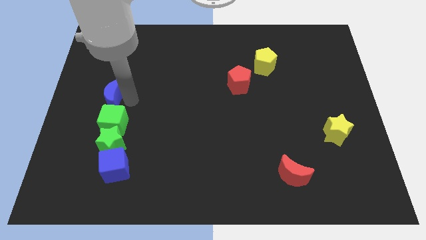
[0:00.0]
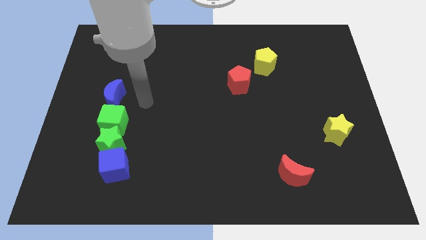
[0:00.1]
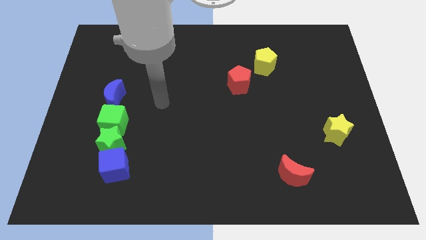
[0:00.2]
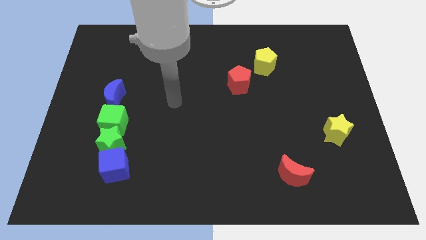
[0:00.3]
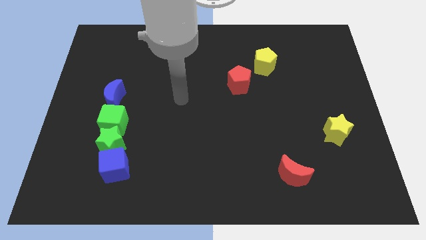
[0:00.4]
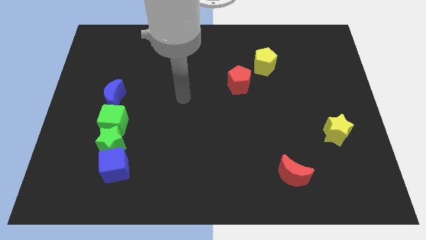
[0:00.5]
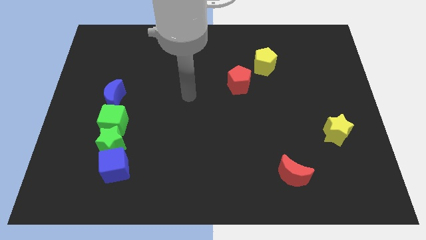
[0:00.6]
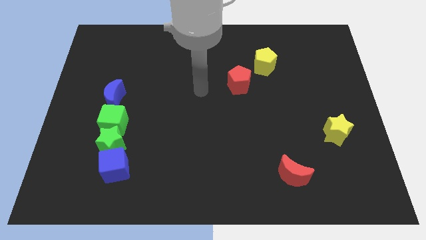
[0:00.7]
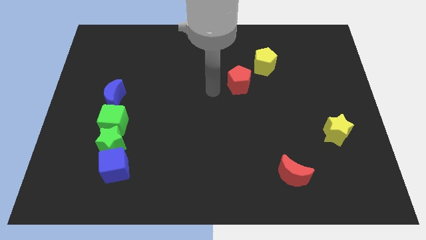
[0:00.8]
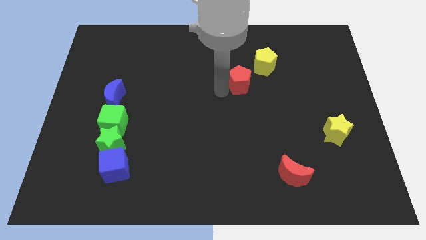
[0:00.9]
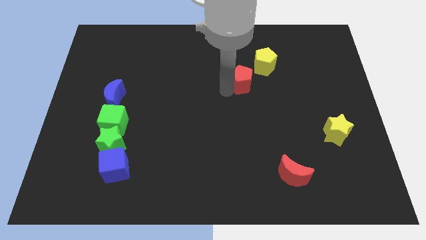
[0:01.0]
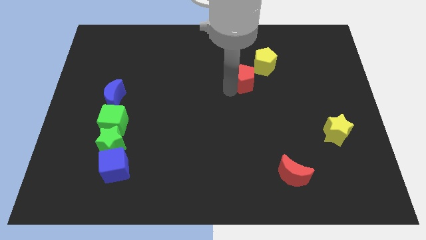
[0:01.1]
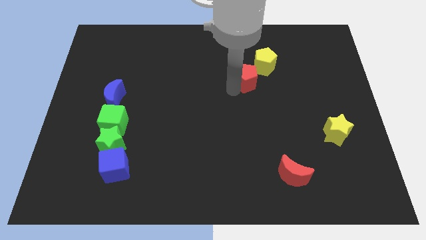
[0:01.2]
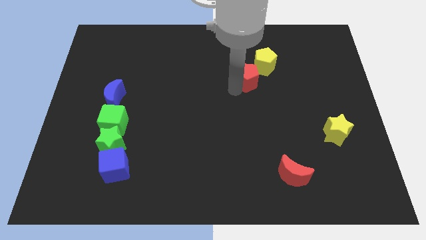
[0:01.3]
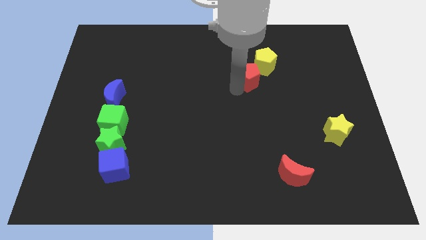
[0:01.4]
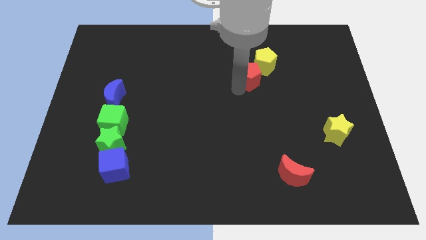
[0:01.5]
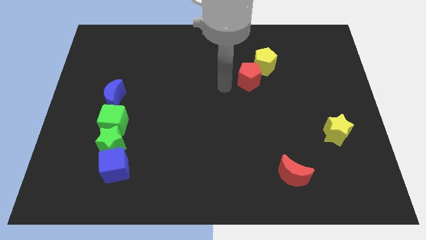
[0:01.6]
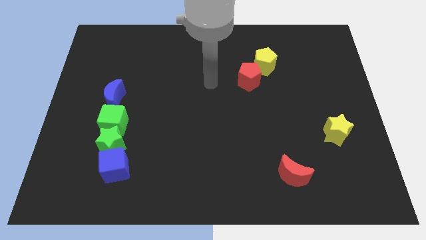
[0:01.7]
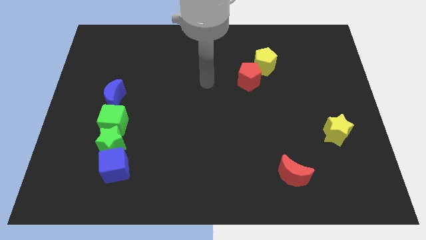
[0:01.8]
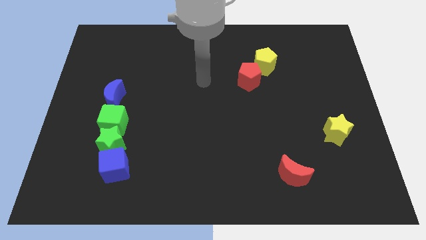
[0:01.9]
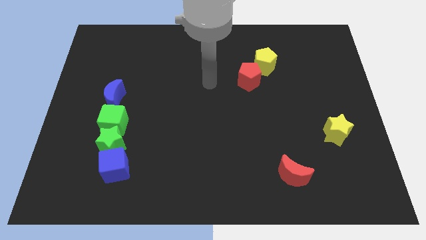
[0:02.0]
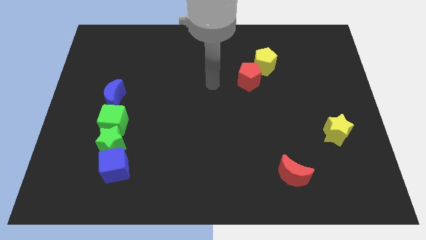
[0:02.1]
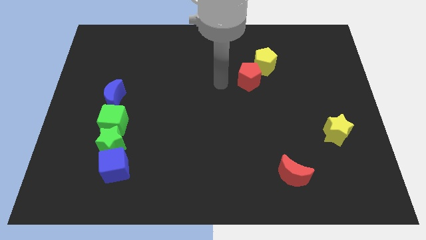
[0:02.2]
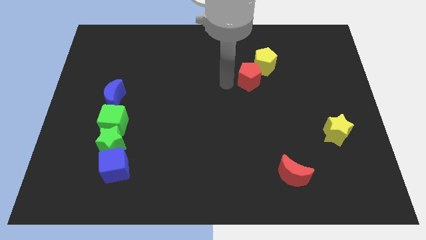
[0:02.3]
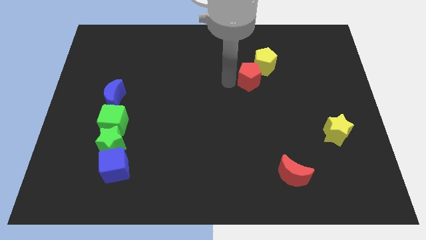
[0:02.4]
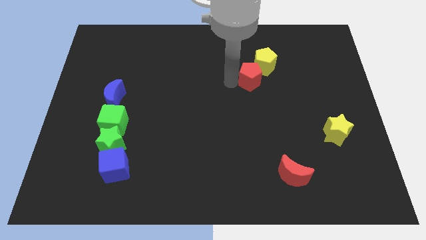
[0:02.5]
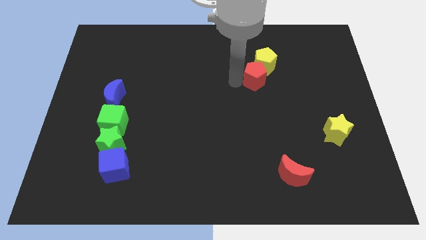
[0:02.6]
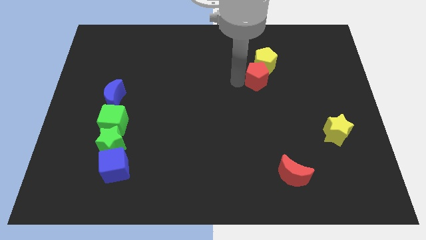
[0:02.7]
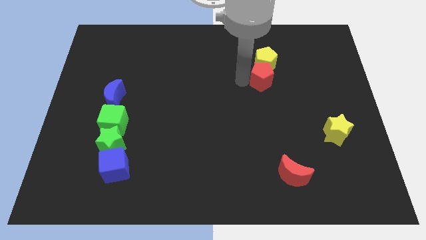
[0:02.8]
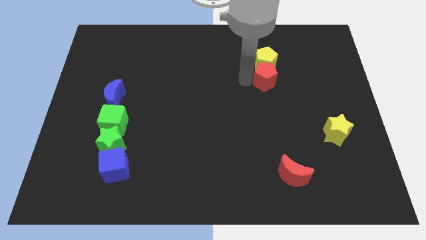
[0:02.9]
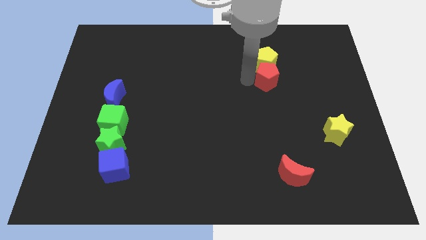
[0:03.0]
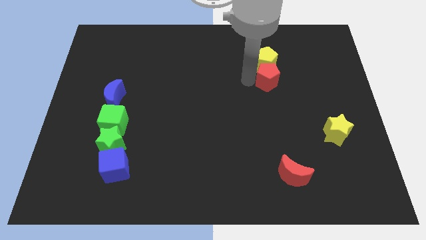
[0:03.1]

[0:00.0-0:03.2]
move the red pentagon below the yellow pentagon

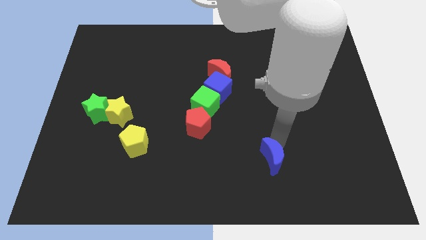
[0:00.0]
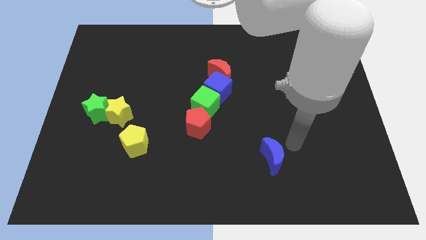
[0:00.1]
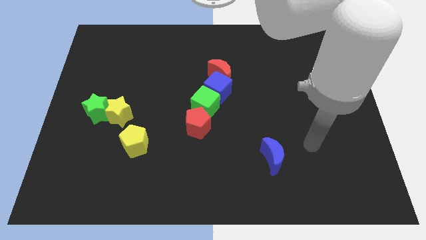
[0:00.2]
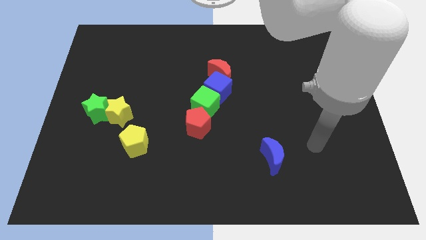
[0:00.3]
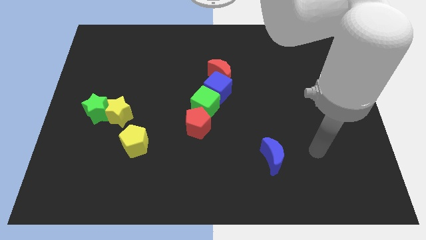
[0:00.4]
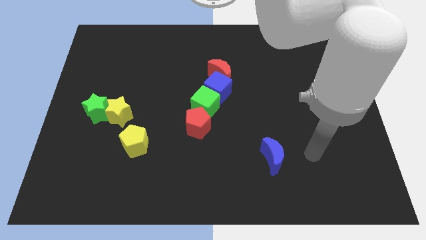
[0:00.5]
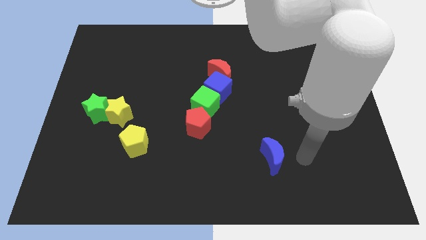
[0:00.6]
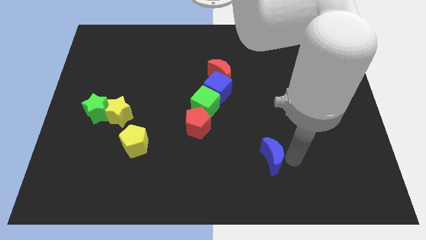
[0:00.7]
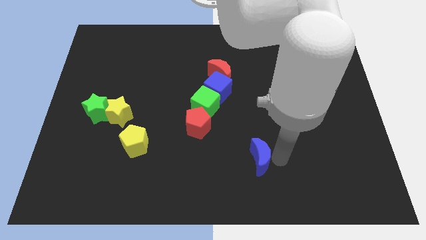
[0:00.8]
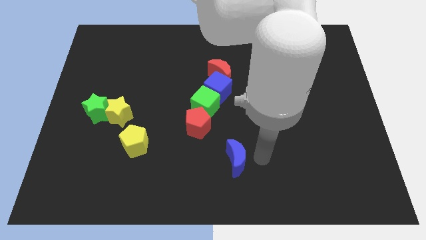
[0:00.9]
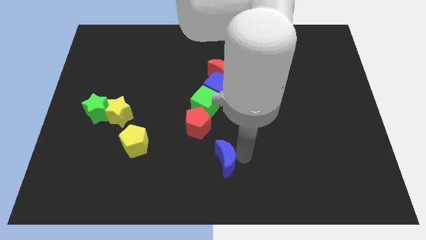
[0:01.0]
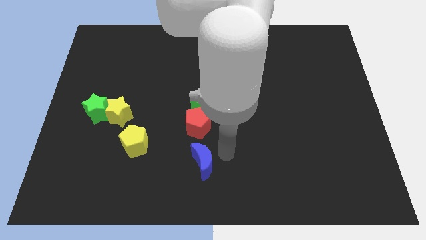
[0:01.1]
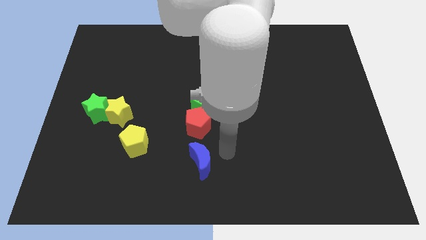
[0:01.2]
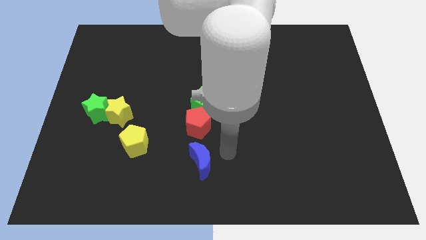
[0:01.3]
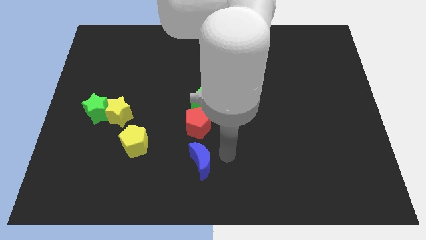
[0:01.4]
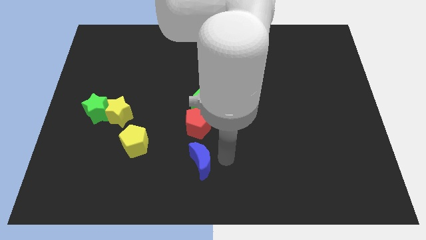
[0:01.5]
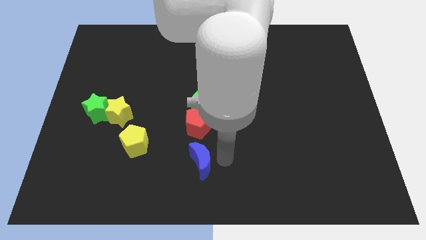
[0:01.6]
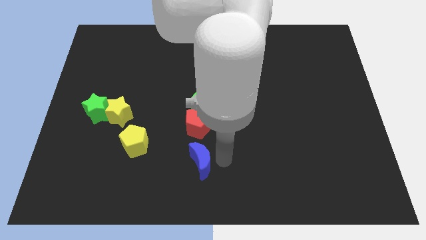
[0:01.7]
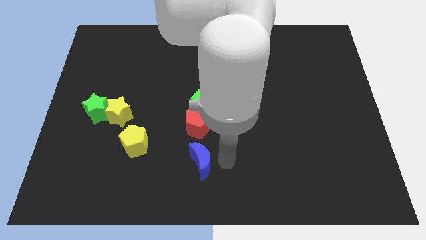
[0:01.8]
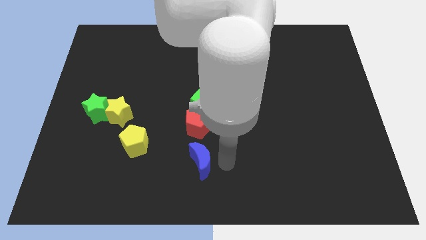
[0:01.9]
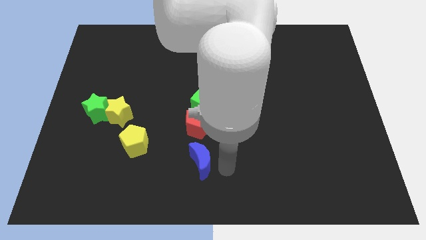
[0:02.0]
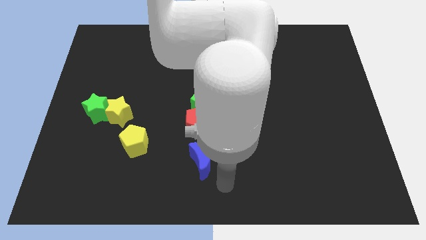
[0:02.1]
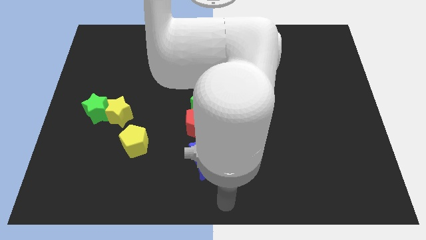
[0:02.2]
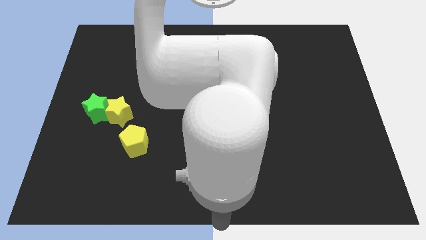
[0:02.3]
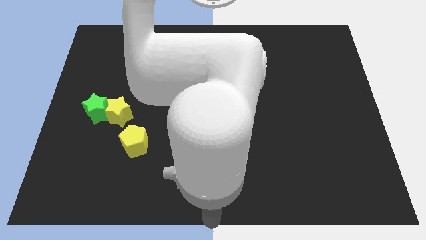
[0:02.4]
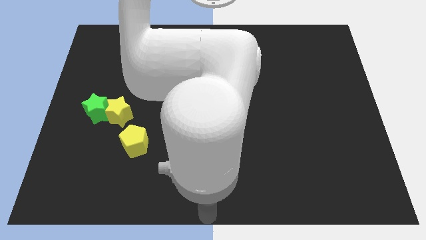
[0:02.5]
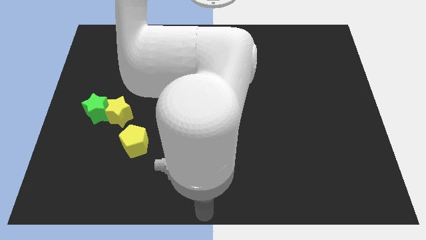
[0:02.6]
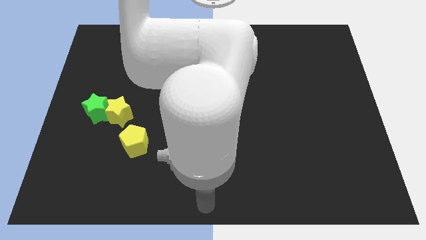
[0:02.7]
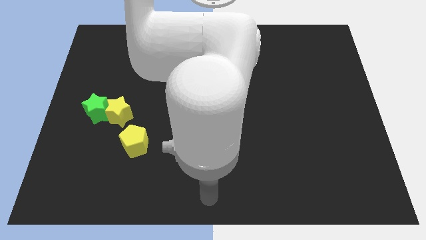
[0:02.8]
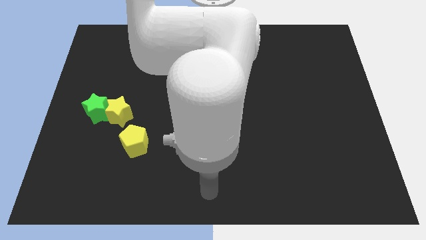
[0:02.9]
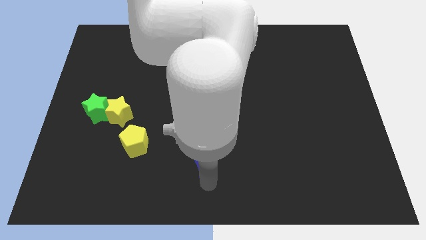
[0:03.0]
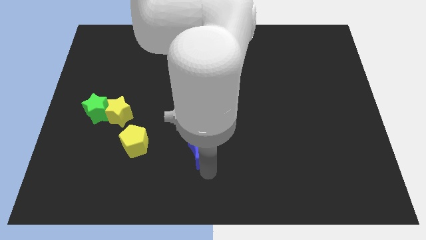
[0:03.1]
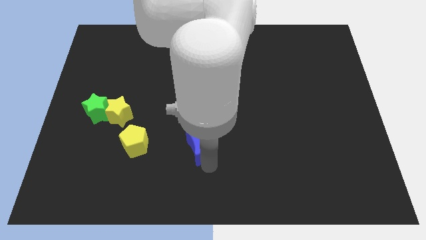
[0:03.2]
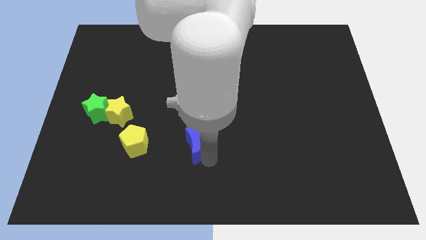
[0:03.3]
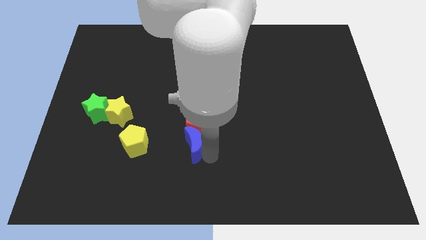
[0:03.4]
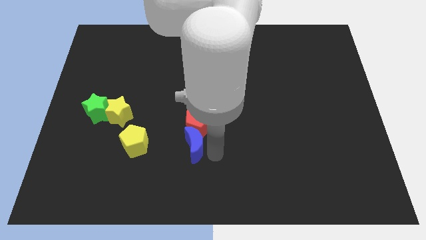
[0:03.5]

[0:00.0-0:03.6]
place the blue moon to the bottom side of the red pentagon

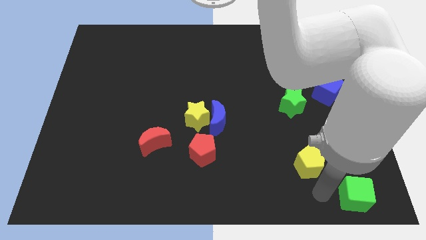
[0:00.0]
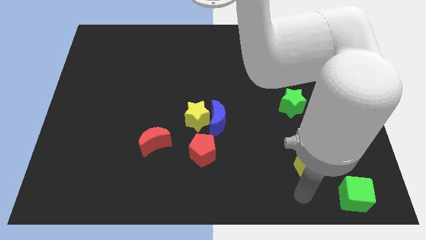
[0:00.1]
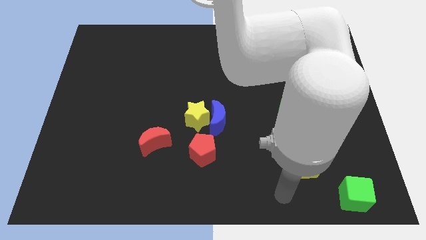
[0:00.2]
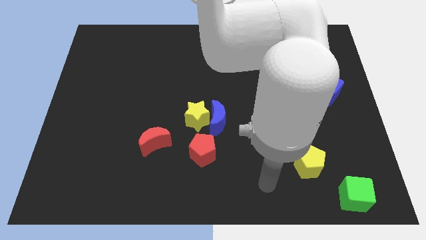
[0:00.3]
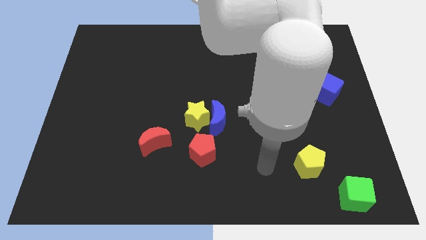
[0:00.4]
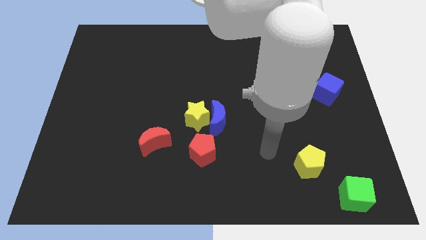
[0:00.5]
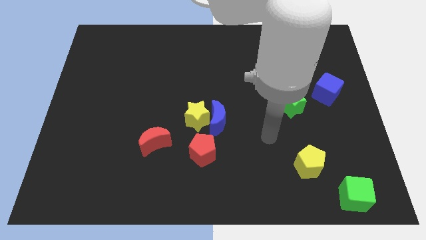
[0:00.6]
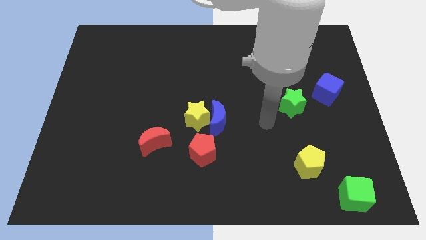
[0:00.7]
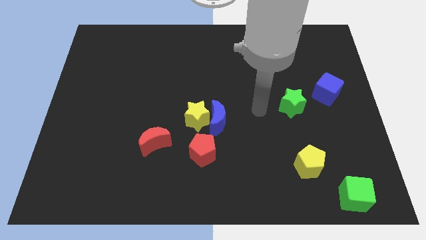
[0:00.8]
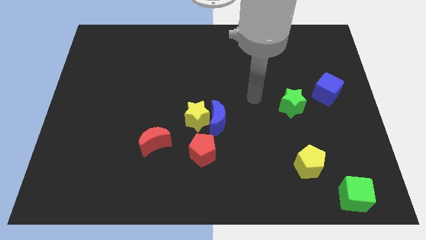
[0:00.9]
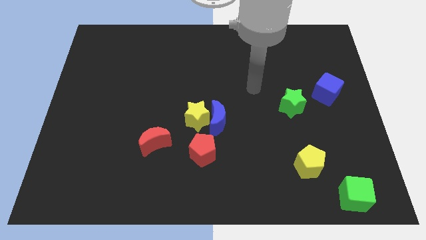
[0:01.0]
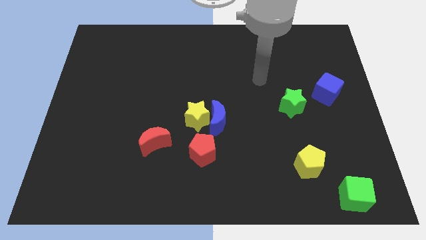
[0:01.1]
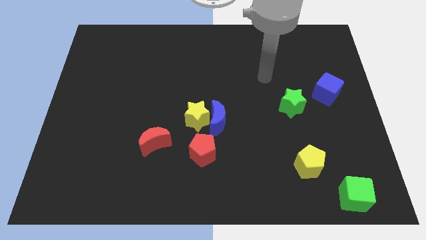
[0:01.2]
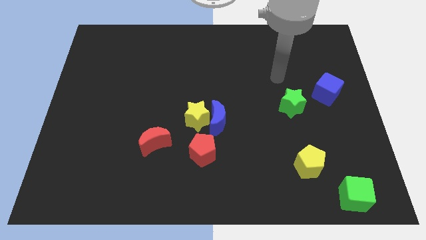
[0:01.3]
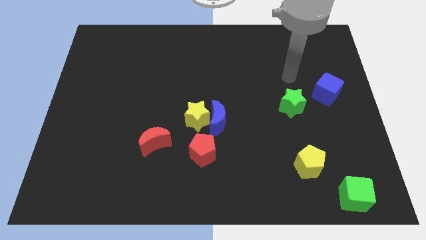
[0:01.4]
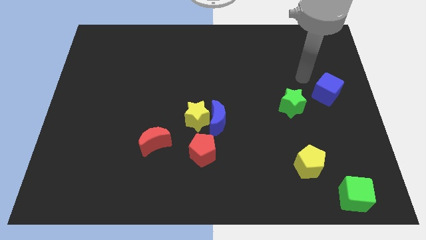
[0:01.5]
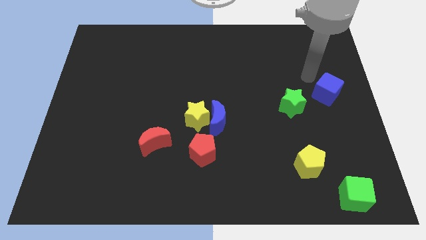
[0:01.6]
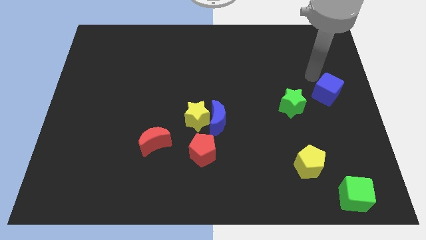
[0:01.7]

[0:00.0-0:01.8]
move your arm towards blue cube

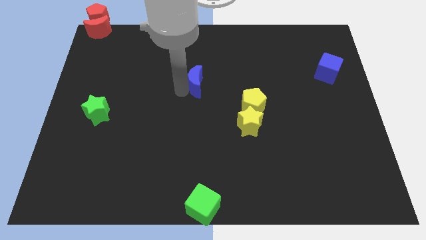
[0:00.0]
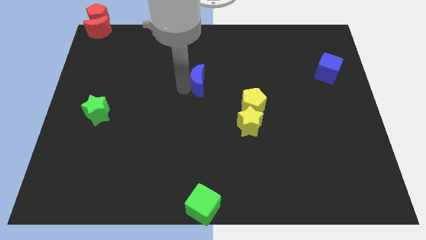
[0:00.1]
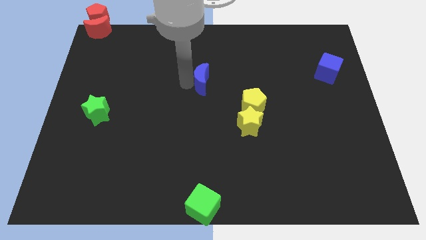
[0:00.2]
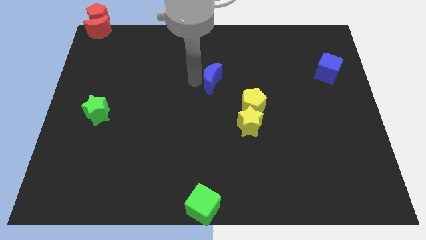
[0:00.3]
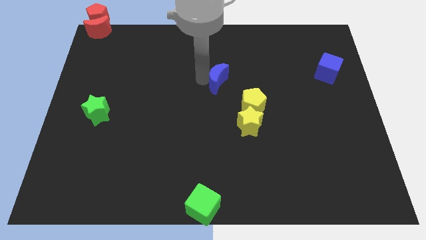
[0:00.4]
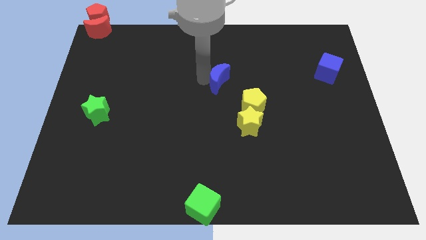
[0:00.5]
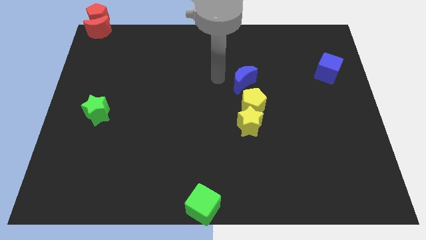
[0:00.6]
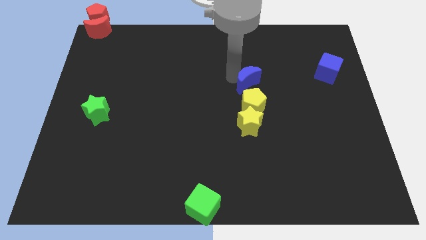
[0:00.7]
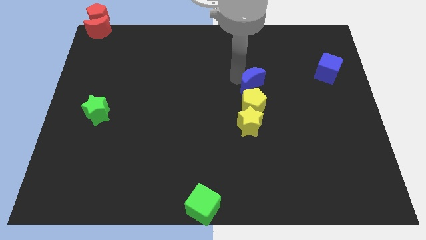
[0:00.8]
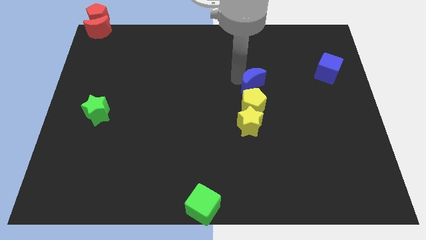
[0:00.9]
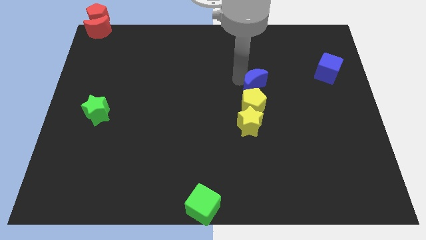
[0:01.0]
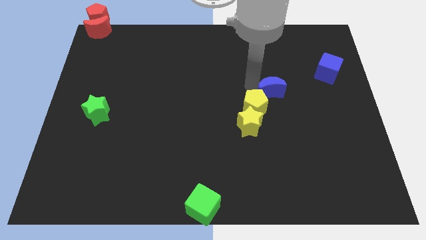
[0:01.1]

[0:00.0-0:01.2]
place the blue moon above the yellow pentagon
